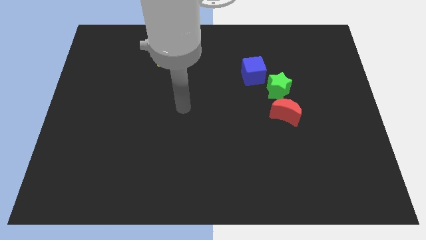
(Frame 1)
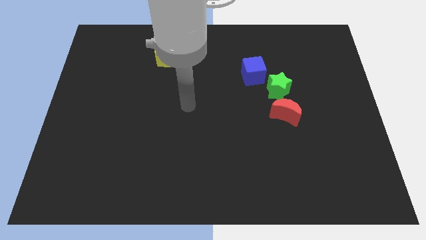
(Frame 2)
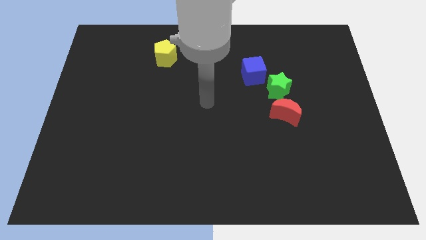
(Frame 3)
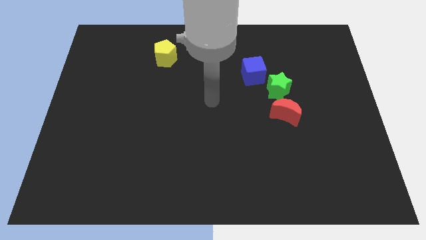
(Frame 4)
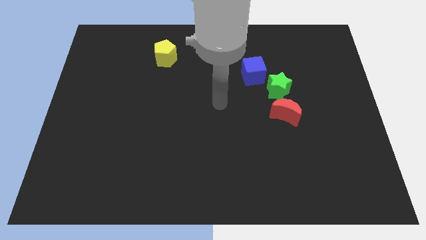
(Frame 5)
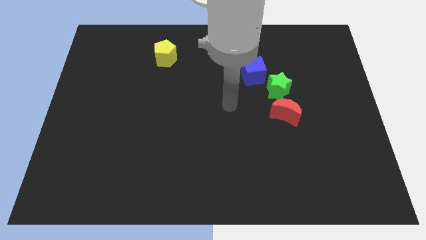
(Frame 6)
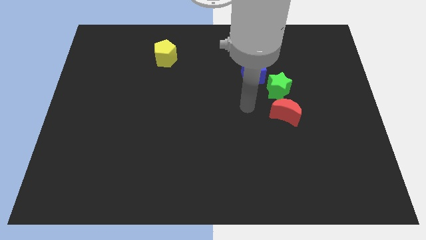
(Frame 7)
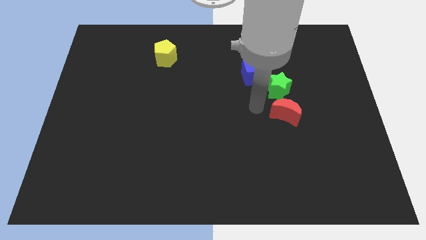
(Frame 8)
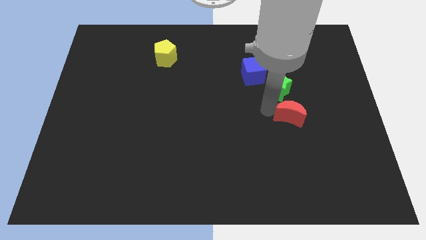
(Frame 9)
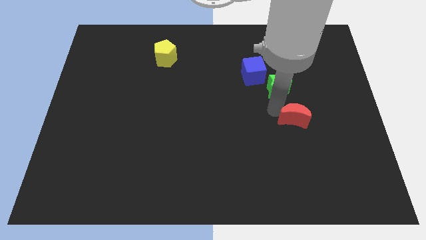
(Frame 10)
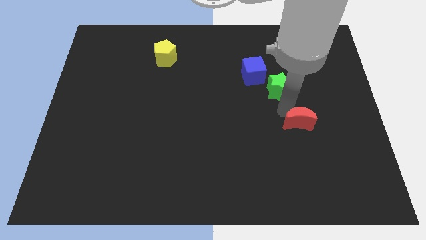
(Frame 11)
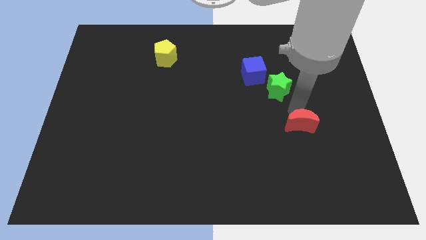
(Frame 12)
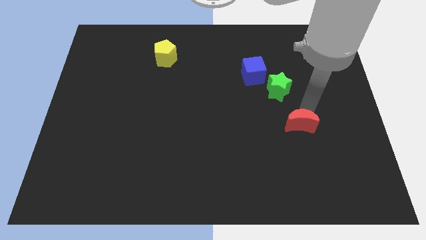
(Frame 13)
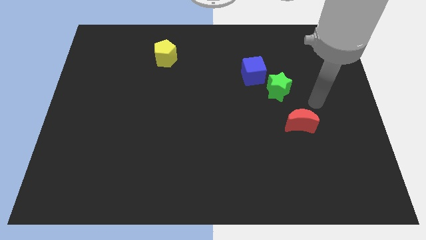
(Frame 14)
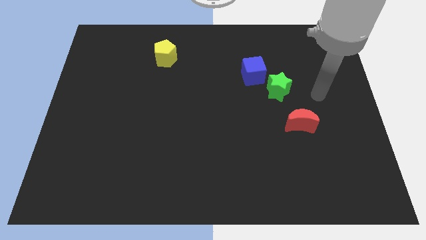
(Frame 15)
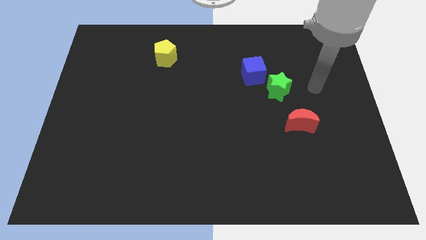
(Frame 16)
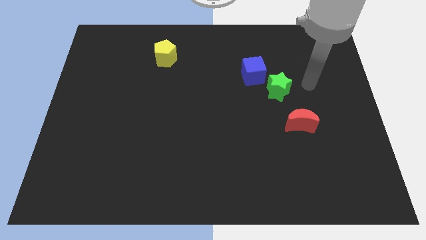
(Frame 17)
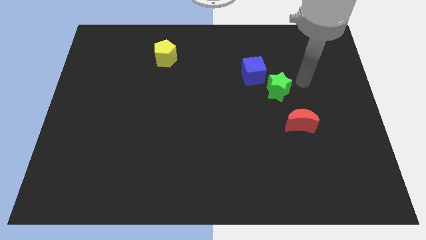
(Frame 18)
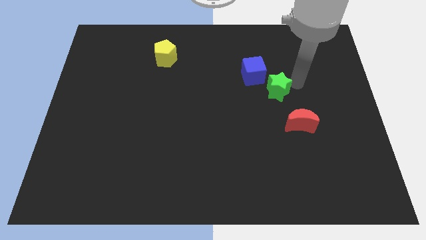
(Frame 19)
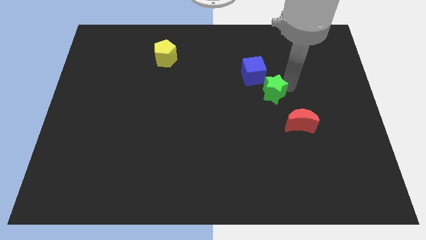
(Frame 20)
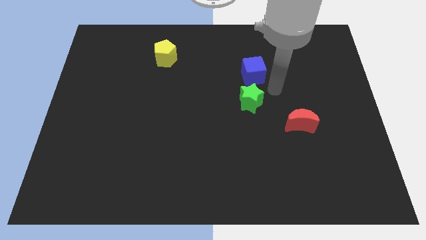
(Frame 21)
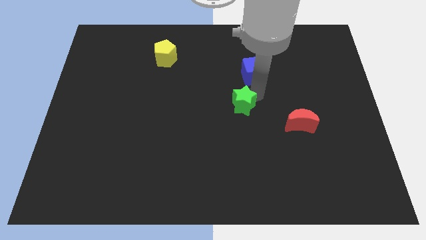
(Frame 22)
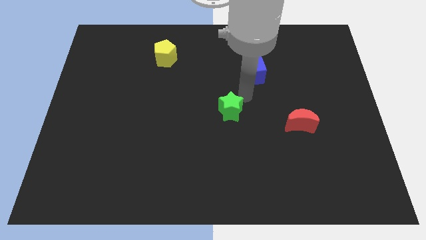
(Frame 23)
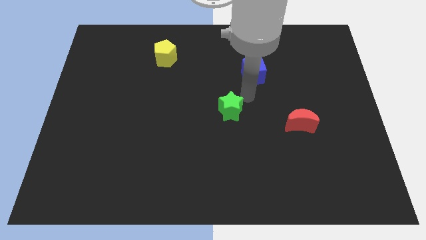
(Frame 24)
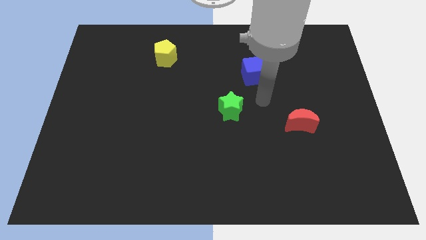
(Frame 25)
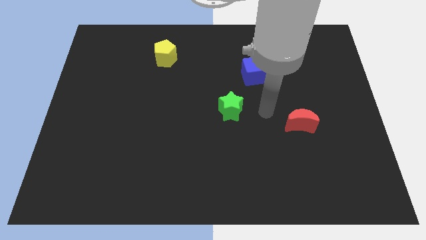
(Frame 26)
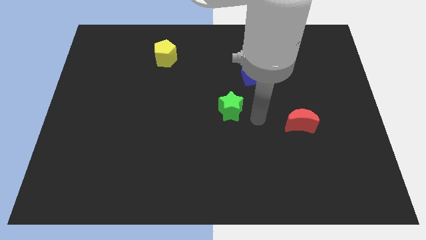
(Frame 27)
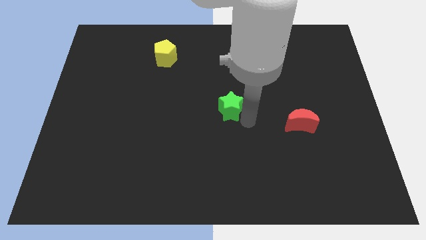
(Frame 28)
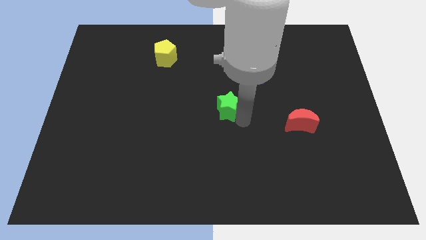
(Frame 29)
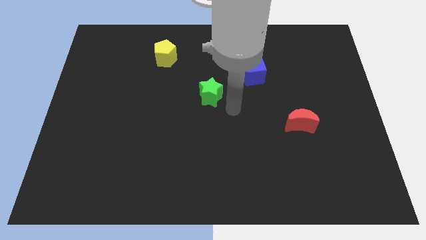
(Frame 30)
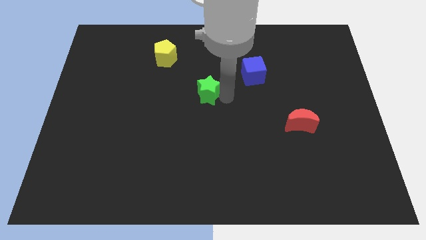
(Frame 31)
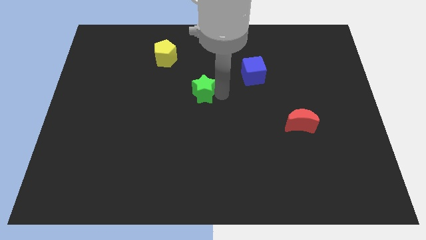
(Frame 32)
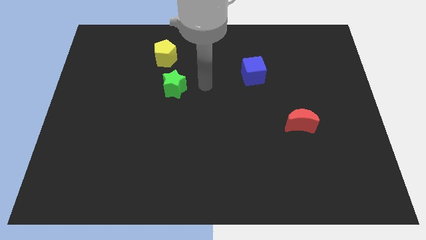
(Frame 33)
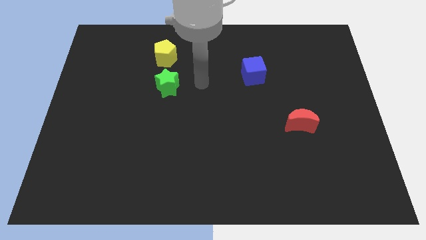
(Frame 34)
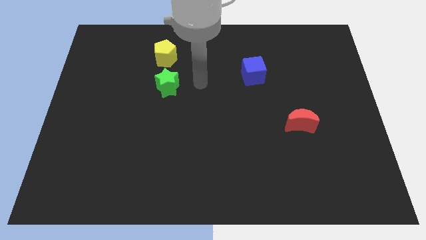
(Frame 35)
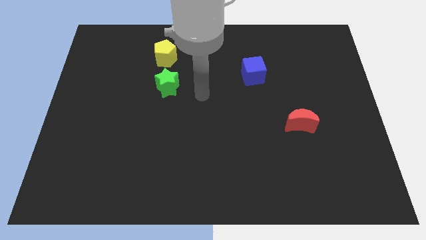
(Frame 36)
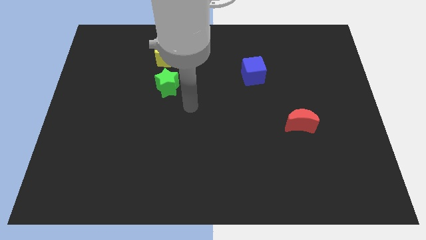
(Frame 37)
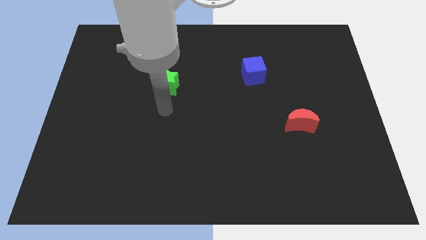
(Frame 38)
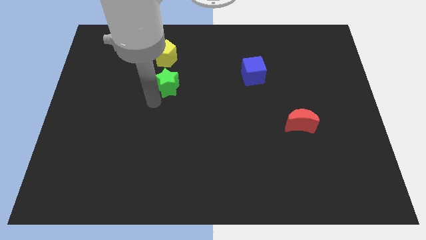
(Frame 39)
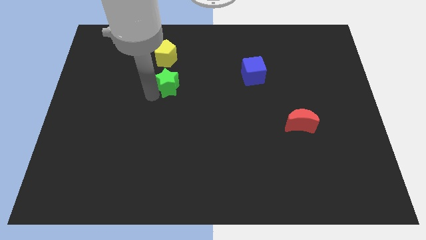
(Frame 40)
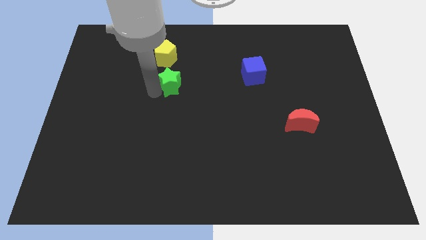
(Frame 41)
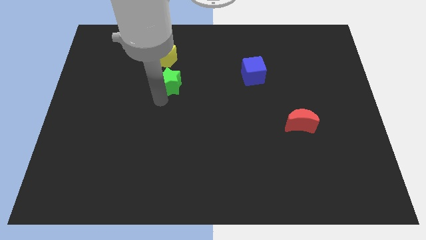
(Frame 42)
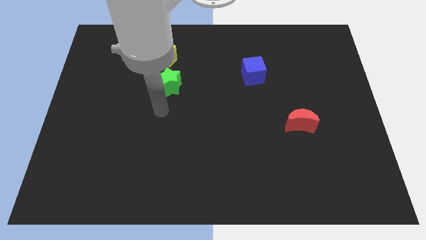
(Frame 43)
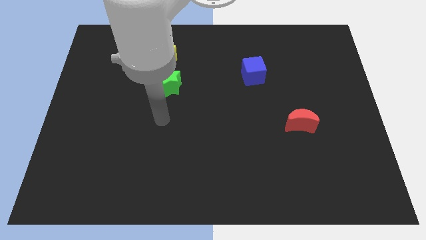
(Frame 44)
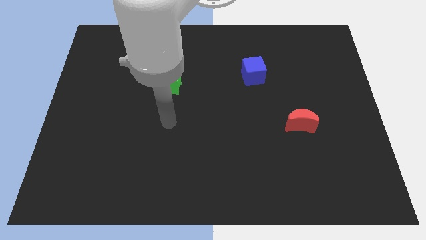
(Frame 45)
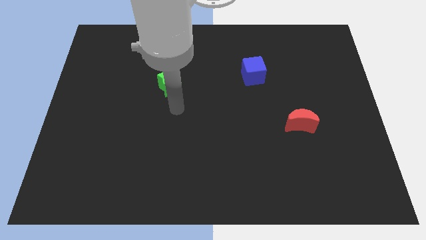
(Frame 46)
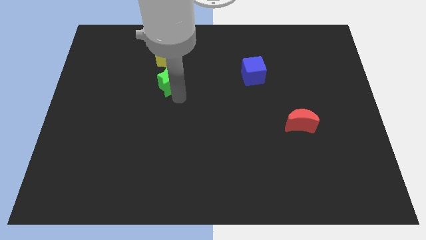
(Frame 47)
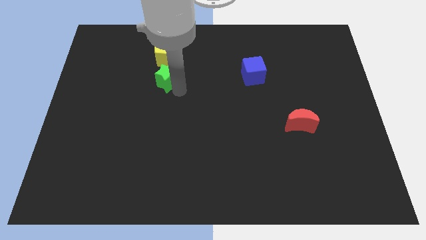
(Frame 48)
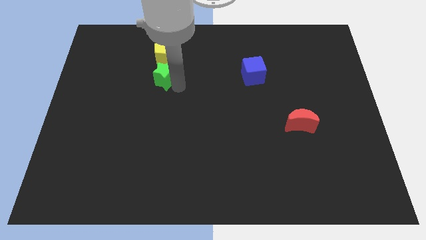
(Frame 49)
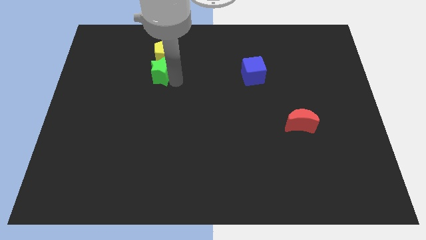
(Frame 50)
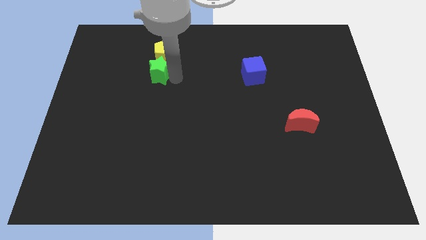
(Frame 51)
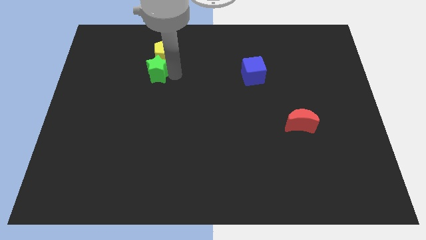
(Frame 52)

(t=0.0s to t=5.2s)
push the green block to the pentagon

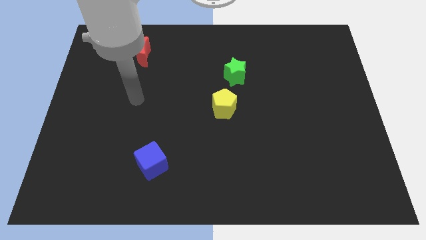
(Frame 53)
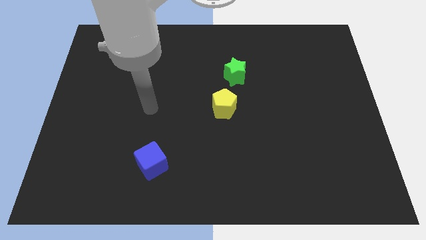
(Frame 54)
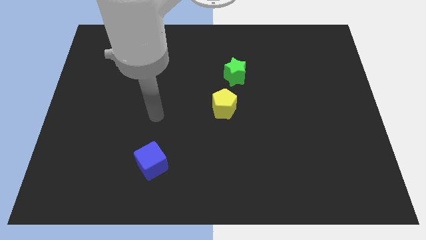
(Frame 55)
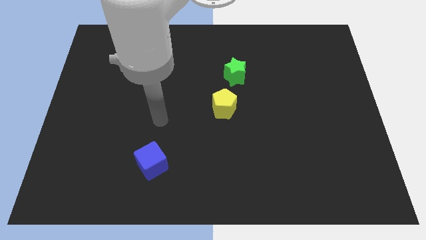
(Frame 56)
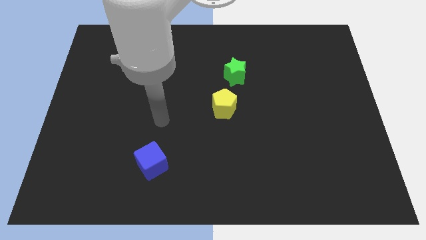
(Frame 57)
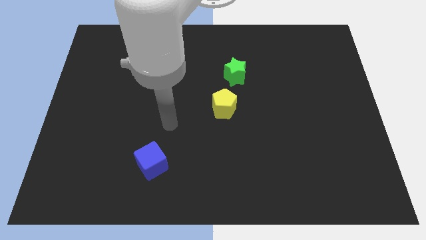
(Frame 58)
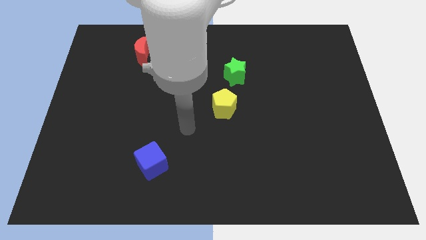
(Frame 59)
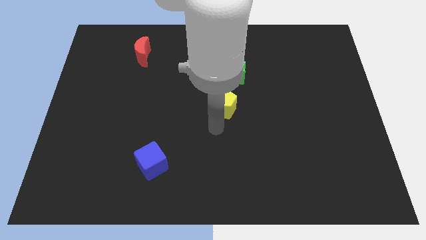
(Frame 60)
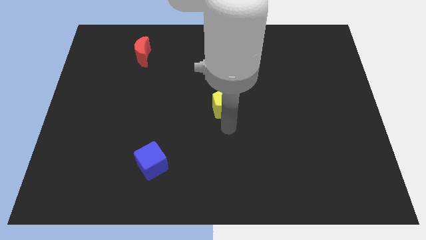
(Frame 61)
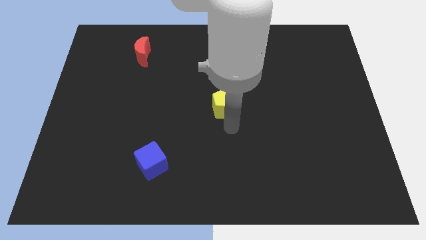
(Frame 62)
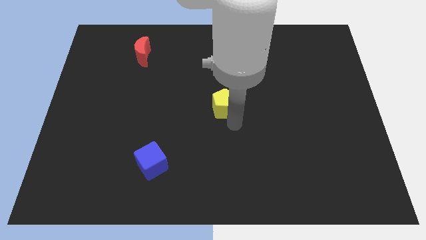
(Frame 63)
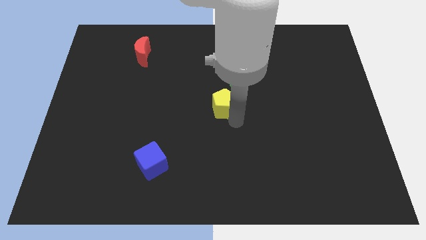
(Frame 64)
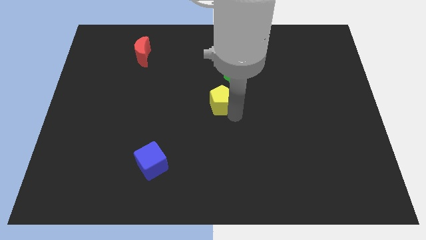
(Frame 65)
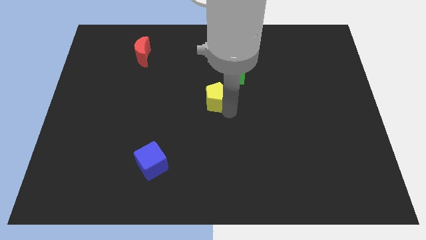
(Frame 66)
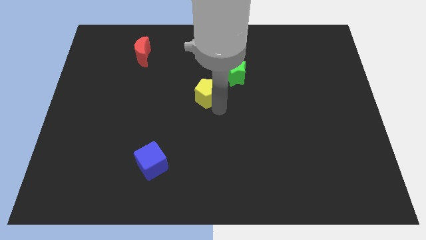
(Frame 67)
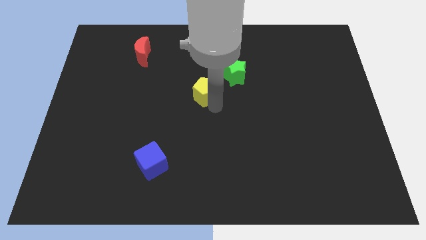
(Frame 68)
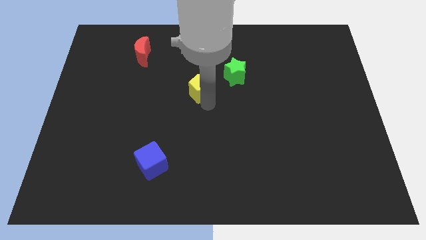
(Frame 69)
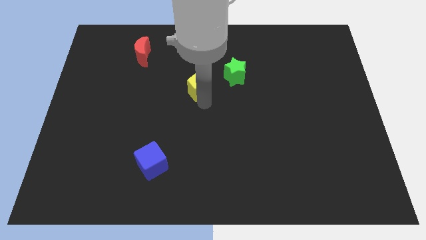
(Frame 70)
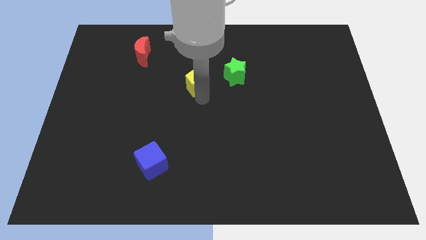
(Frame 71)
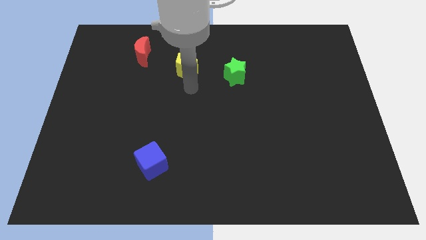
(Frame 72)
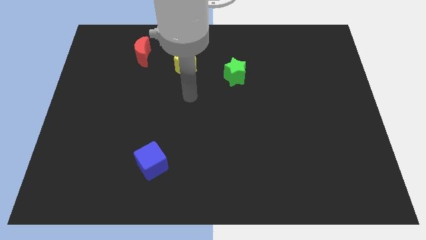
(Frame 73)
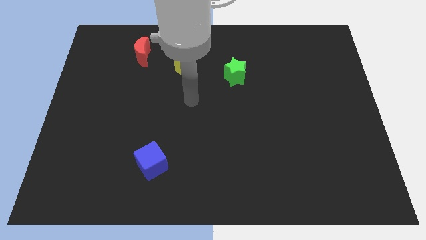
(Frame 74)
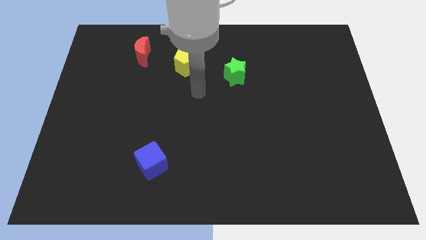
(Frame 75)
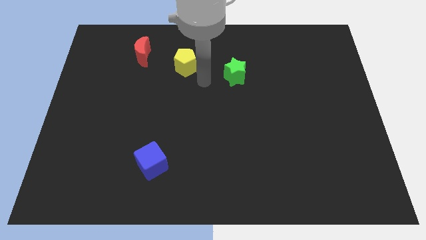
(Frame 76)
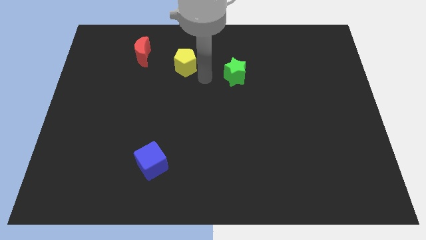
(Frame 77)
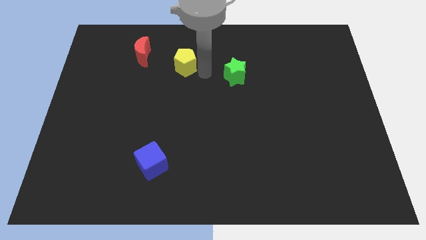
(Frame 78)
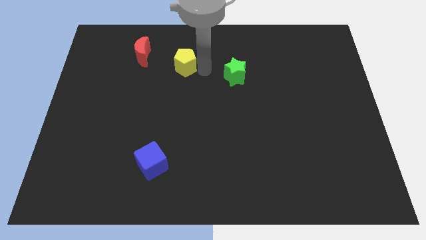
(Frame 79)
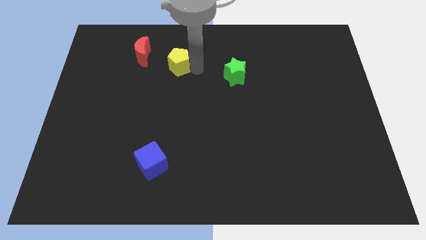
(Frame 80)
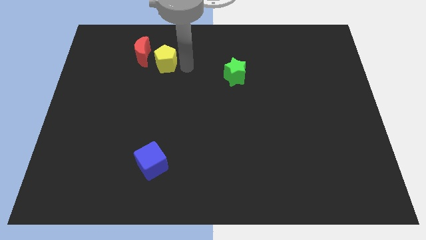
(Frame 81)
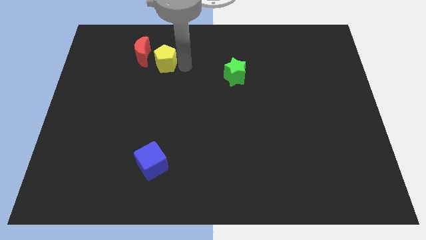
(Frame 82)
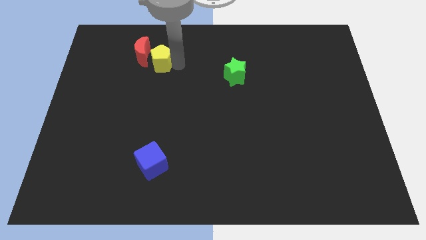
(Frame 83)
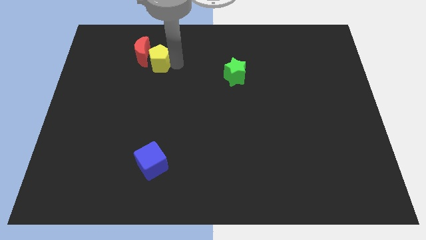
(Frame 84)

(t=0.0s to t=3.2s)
push the yellow block to the red moon

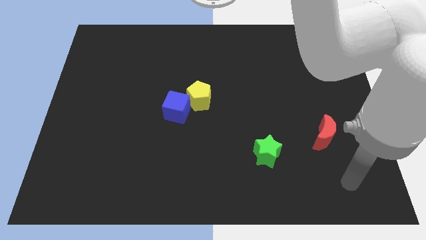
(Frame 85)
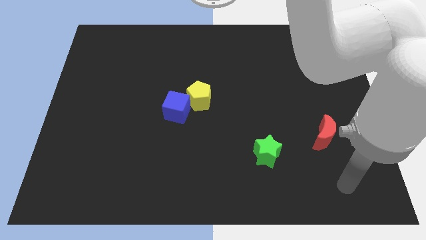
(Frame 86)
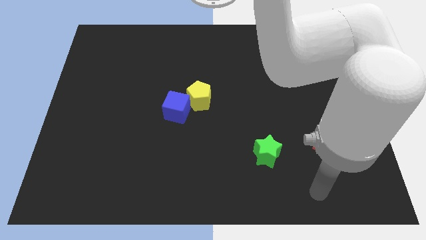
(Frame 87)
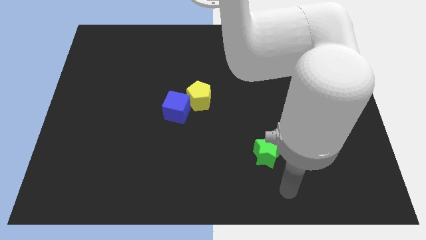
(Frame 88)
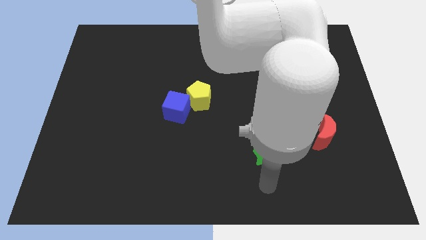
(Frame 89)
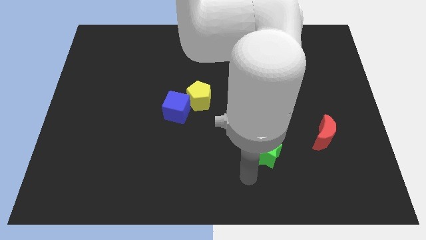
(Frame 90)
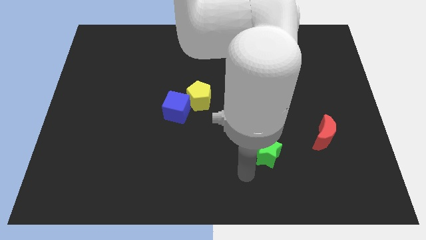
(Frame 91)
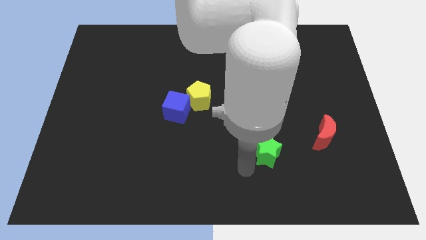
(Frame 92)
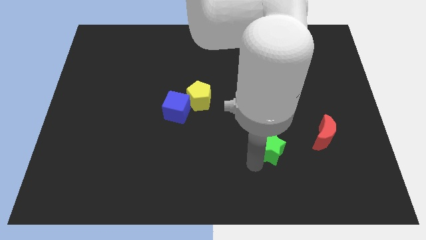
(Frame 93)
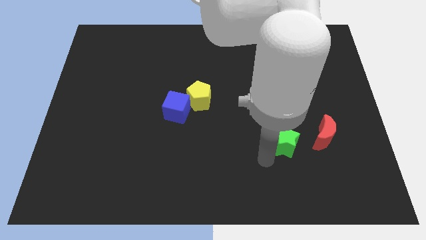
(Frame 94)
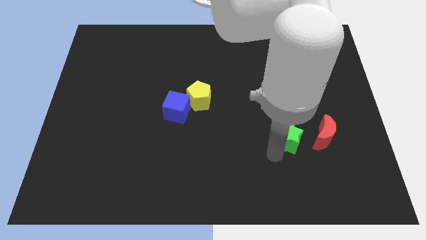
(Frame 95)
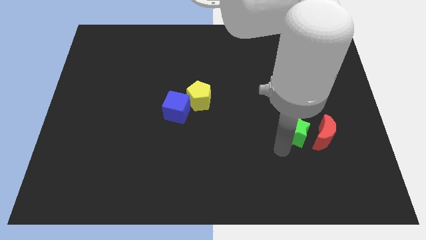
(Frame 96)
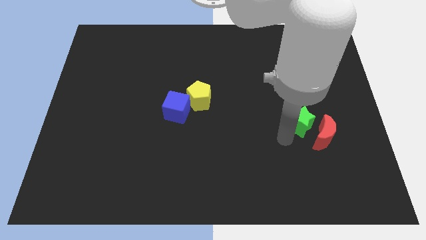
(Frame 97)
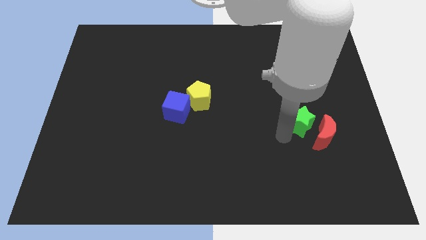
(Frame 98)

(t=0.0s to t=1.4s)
put the star close to the moon
